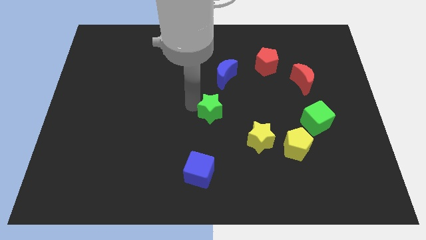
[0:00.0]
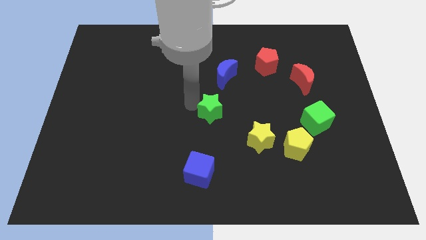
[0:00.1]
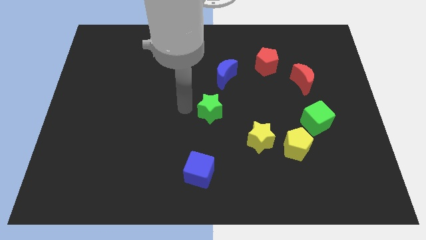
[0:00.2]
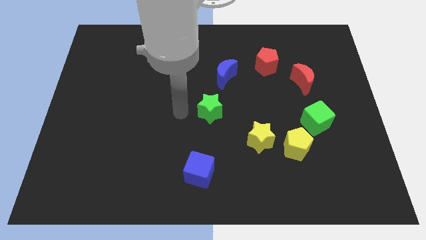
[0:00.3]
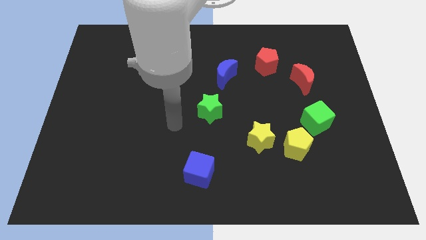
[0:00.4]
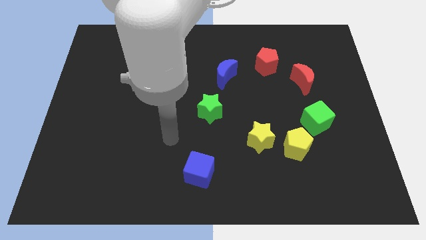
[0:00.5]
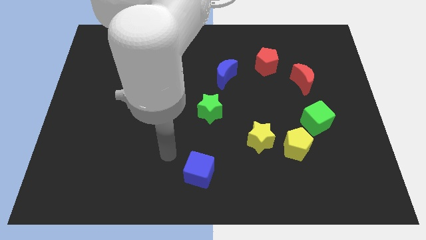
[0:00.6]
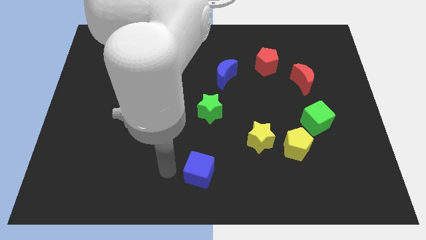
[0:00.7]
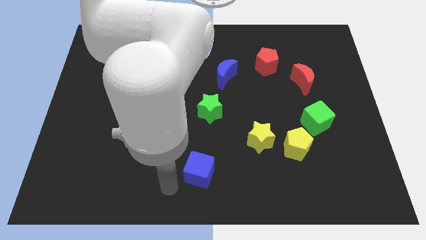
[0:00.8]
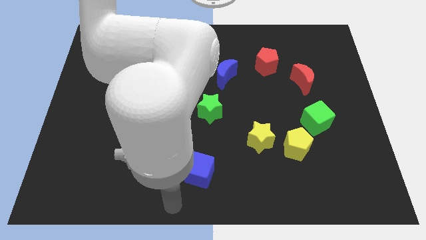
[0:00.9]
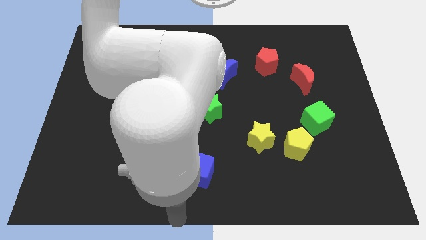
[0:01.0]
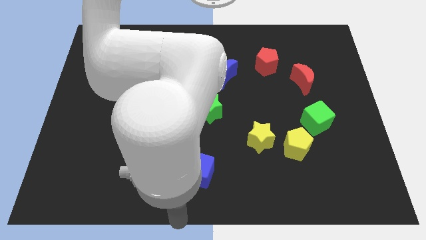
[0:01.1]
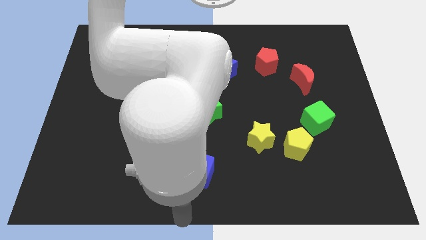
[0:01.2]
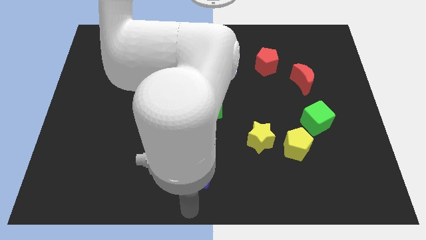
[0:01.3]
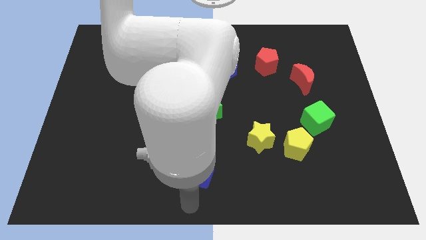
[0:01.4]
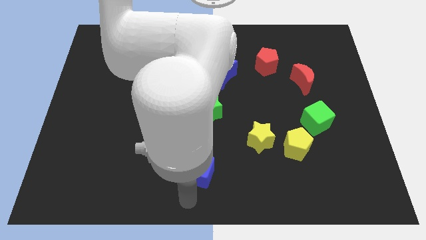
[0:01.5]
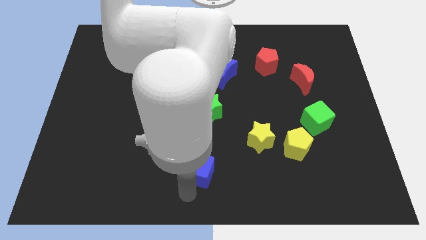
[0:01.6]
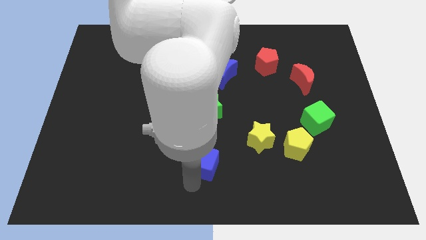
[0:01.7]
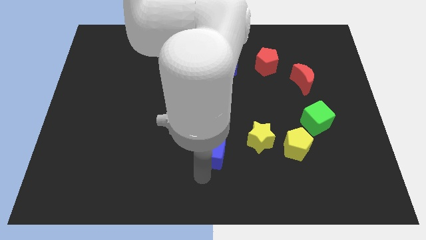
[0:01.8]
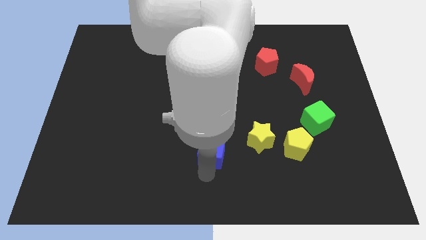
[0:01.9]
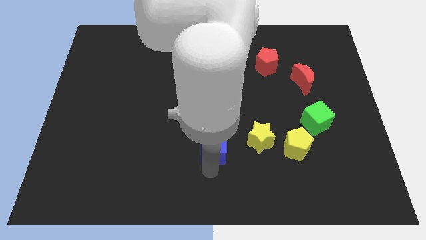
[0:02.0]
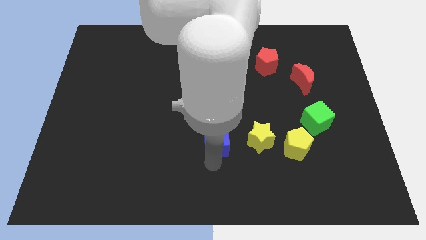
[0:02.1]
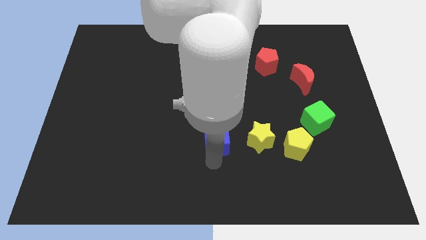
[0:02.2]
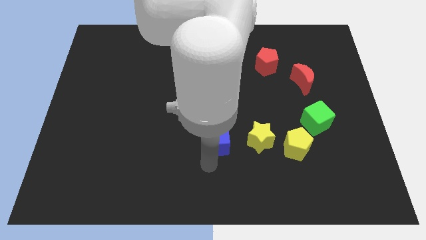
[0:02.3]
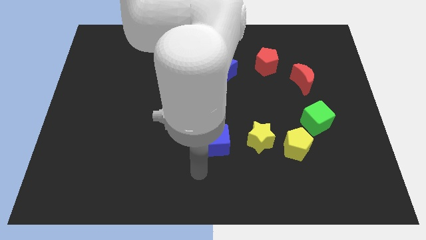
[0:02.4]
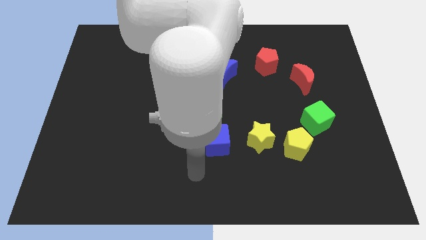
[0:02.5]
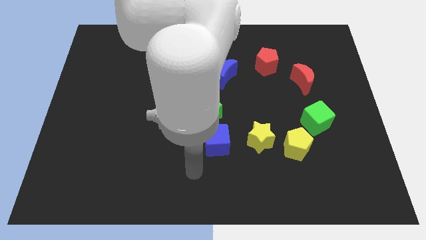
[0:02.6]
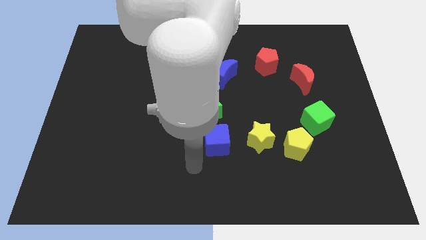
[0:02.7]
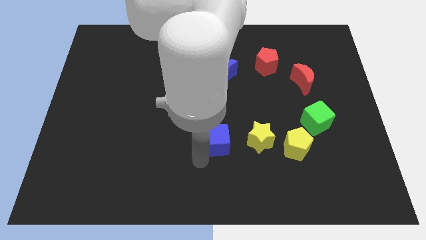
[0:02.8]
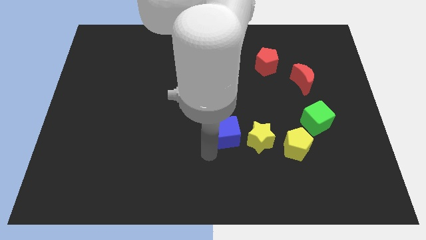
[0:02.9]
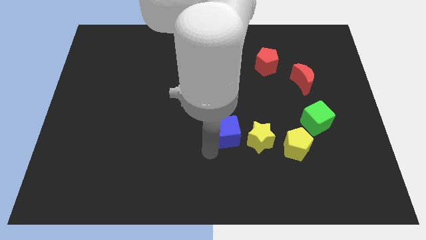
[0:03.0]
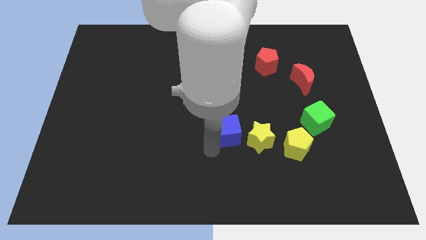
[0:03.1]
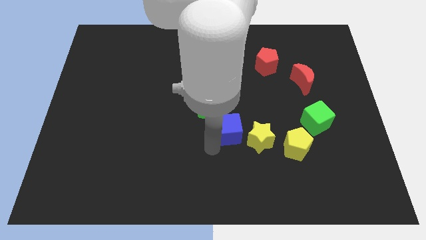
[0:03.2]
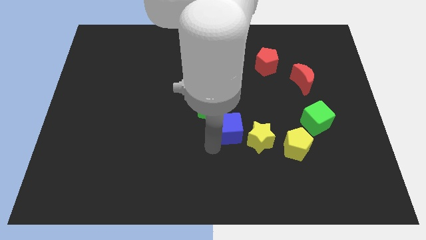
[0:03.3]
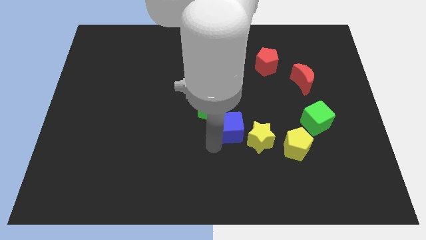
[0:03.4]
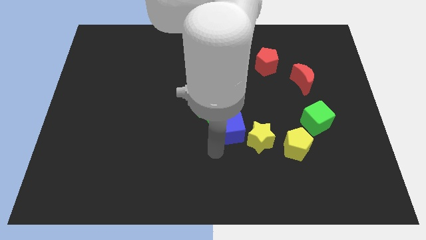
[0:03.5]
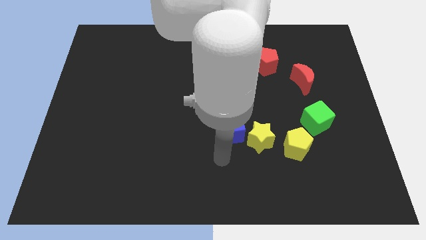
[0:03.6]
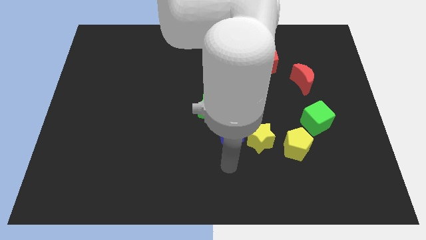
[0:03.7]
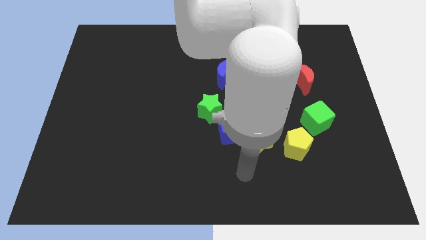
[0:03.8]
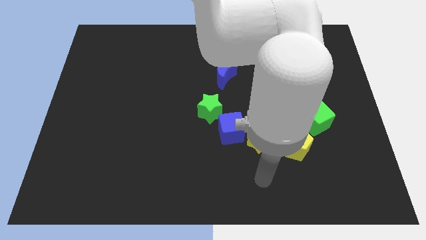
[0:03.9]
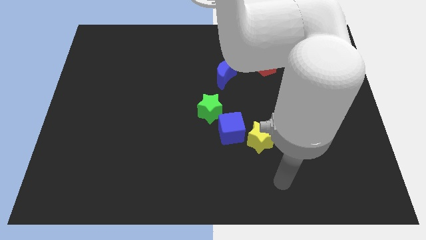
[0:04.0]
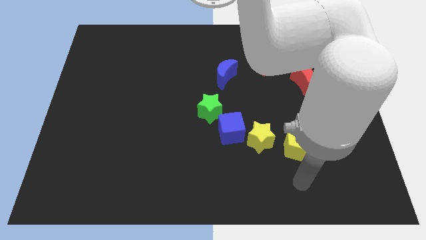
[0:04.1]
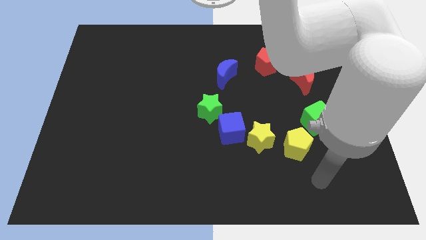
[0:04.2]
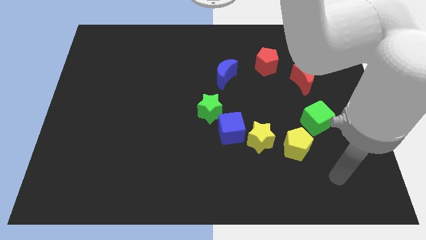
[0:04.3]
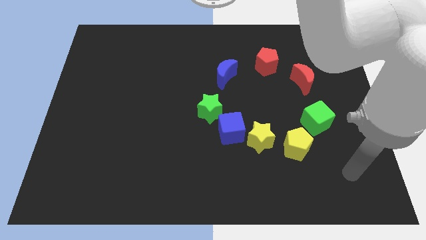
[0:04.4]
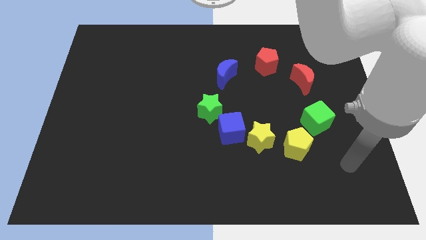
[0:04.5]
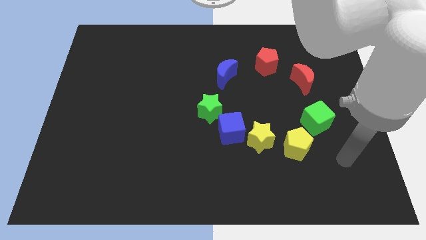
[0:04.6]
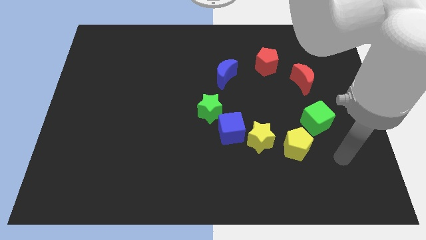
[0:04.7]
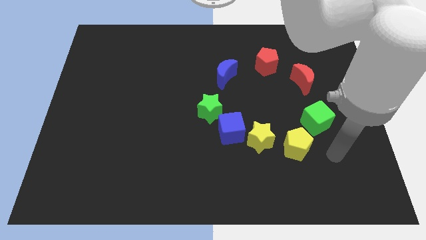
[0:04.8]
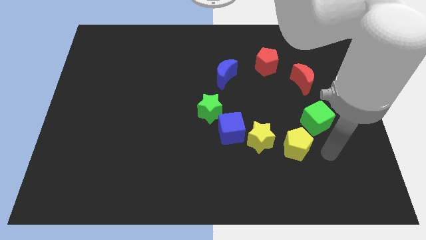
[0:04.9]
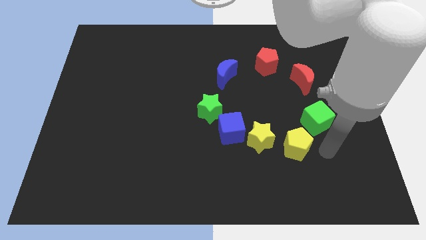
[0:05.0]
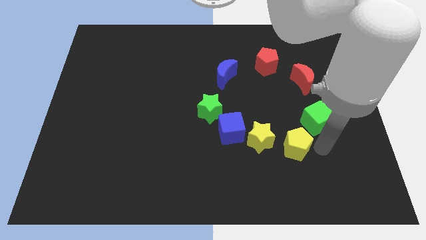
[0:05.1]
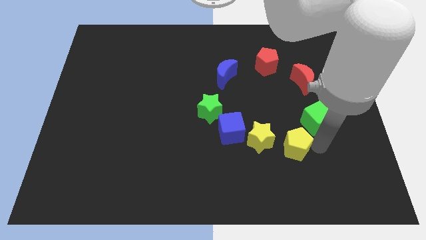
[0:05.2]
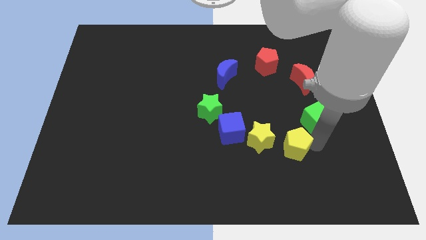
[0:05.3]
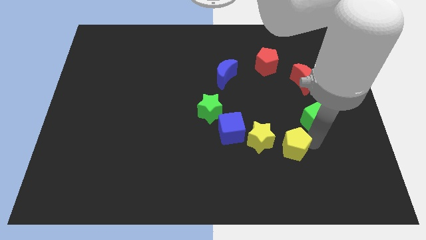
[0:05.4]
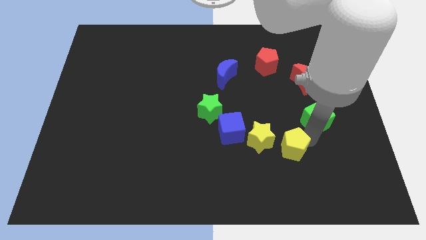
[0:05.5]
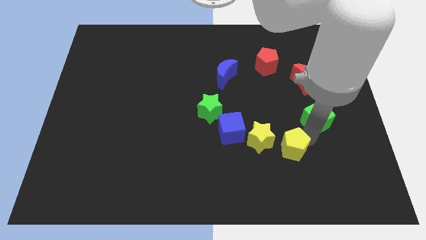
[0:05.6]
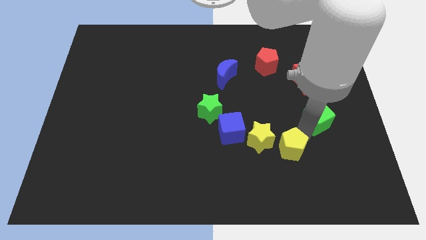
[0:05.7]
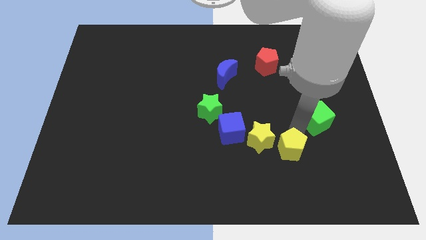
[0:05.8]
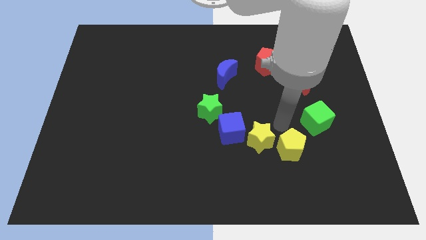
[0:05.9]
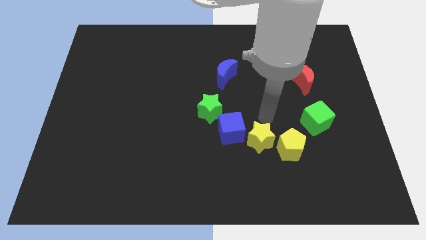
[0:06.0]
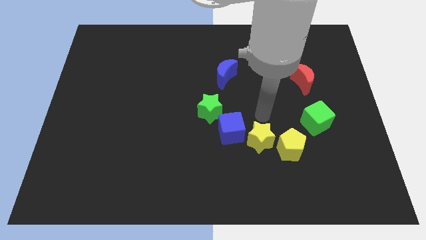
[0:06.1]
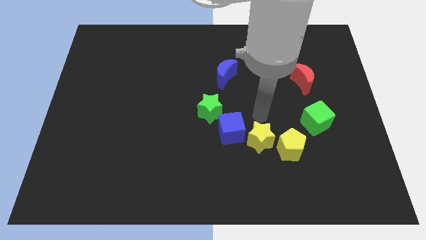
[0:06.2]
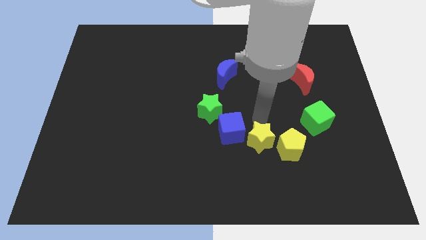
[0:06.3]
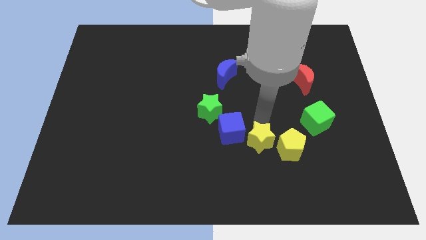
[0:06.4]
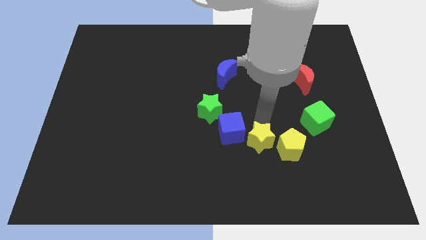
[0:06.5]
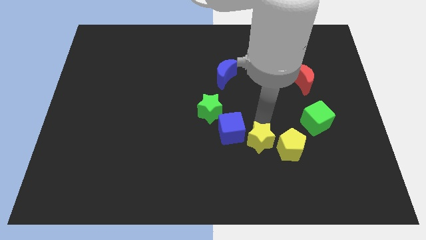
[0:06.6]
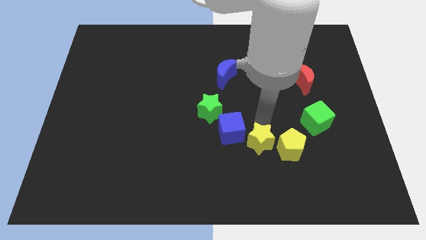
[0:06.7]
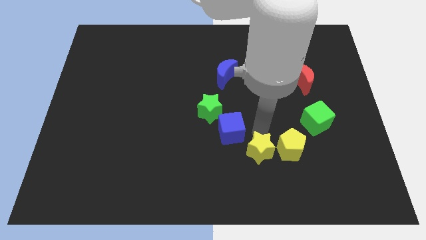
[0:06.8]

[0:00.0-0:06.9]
adjust the group of blocks to form a circle

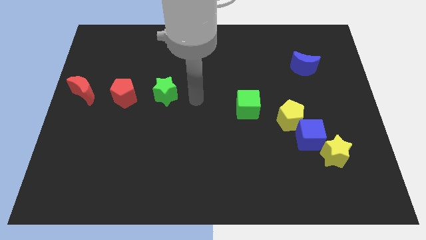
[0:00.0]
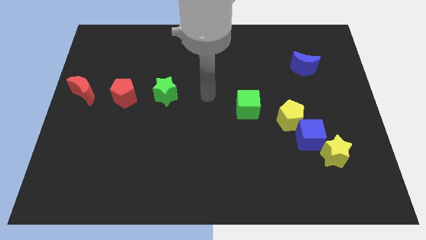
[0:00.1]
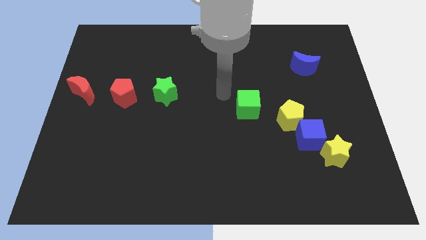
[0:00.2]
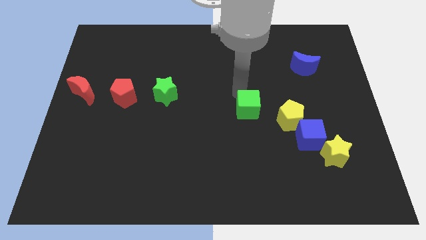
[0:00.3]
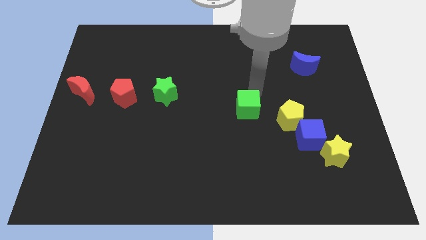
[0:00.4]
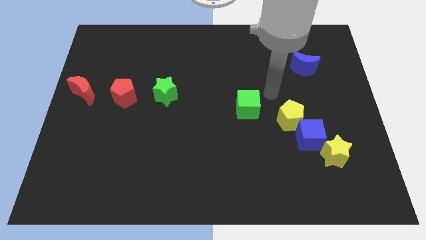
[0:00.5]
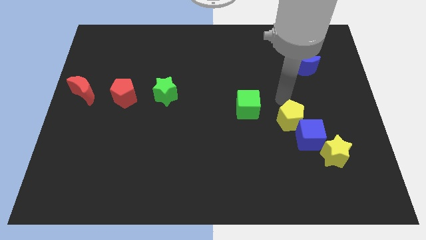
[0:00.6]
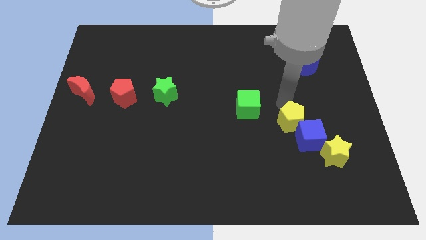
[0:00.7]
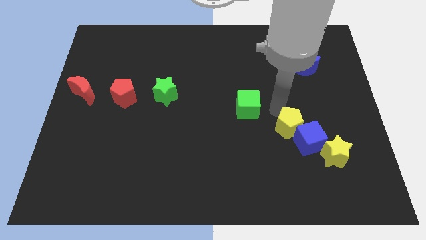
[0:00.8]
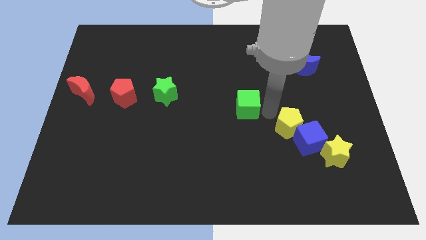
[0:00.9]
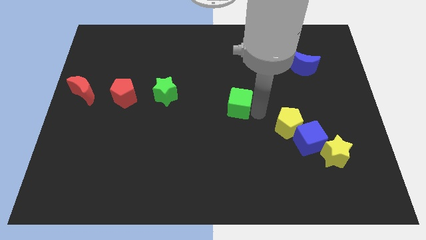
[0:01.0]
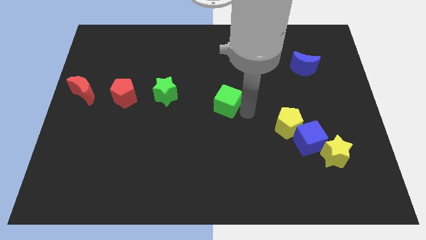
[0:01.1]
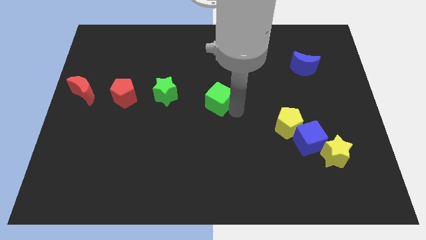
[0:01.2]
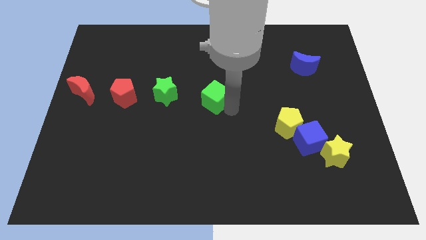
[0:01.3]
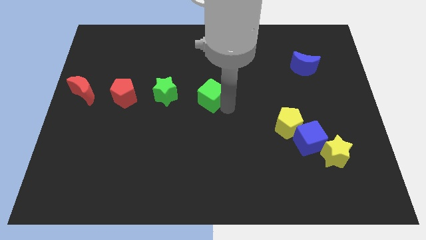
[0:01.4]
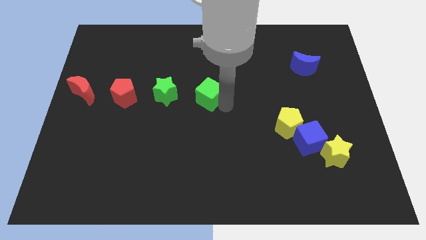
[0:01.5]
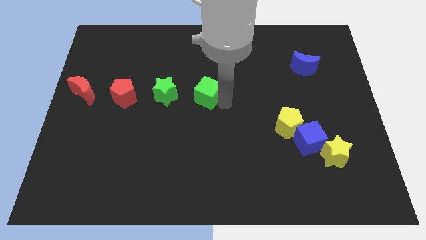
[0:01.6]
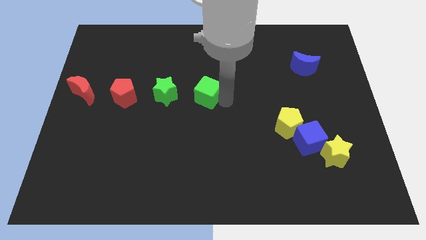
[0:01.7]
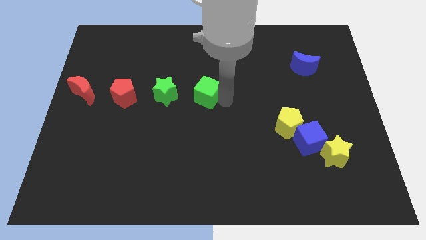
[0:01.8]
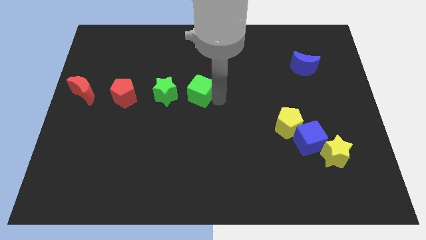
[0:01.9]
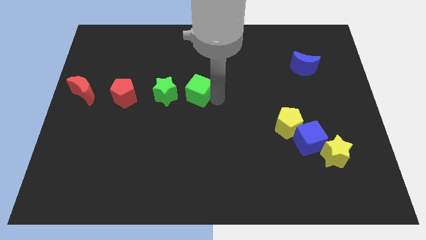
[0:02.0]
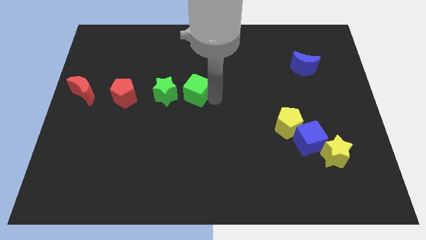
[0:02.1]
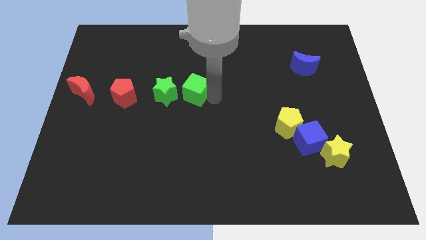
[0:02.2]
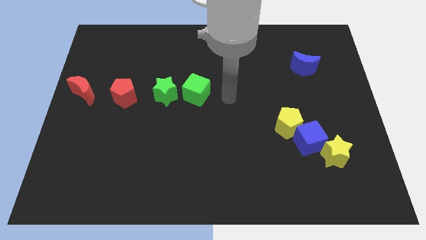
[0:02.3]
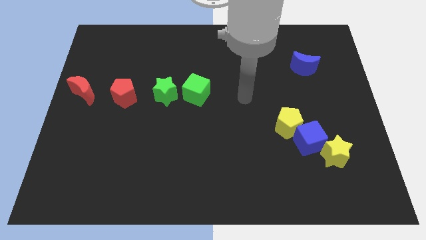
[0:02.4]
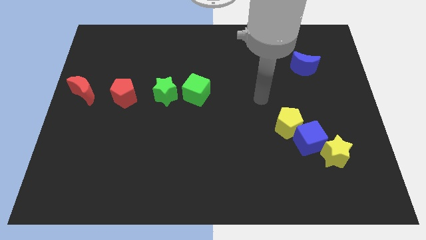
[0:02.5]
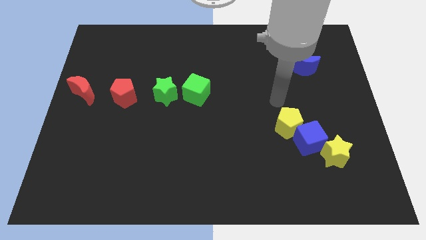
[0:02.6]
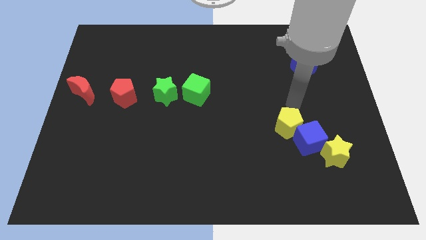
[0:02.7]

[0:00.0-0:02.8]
push the green cube close to the green star
